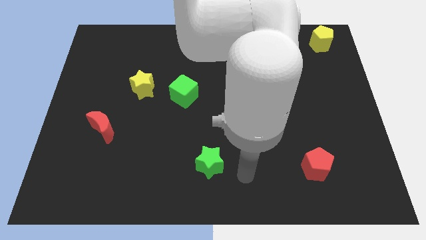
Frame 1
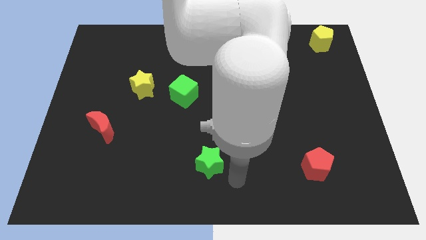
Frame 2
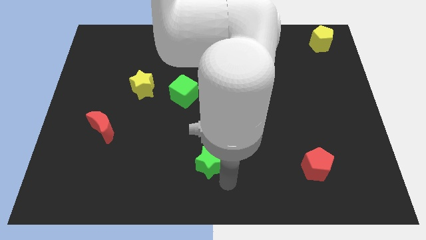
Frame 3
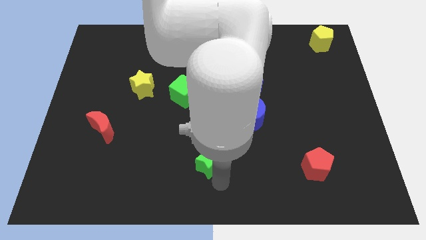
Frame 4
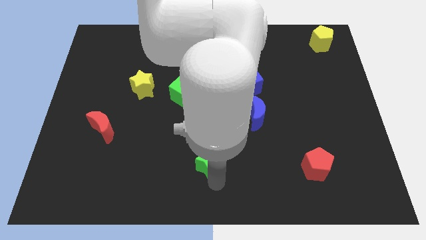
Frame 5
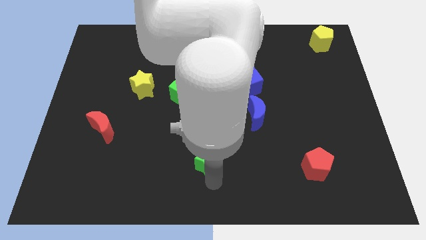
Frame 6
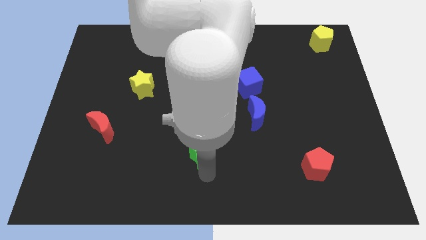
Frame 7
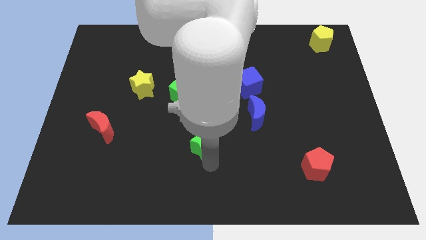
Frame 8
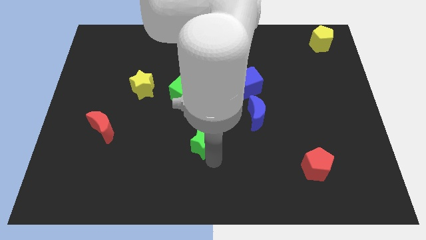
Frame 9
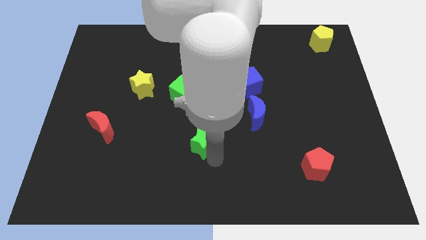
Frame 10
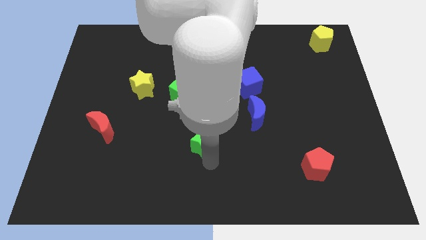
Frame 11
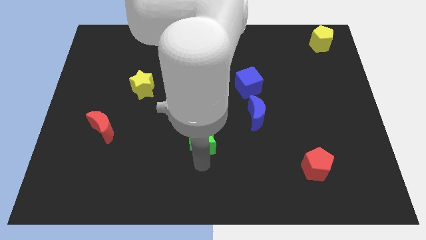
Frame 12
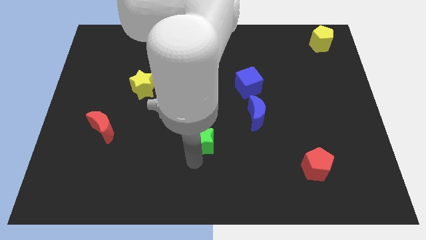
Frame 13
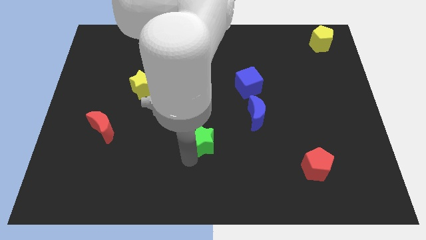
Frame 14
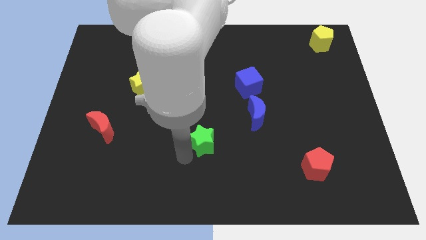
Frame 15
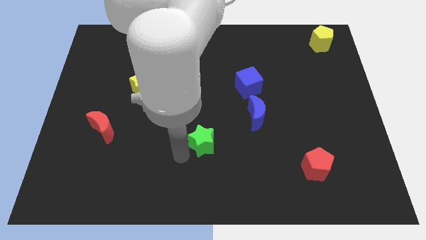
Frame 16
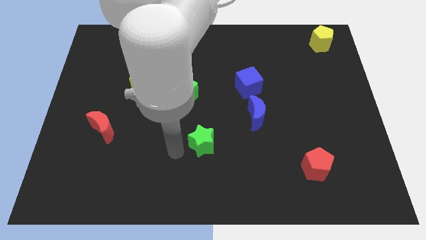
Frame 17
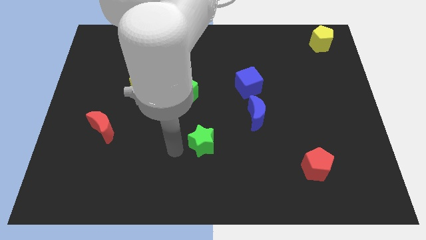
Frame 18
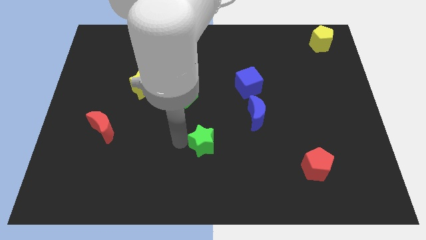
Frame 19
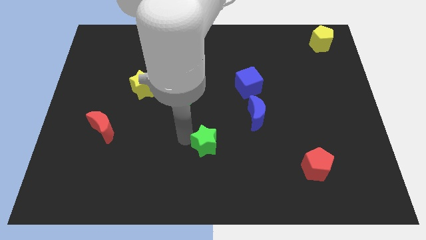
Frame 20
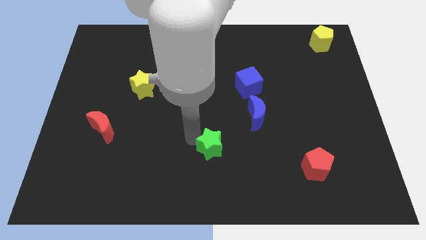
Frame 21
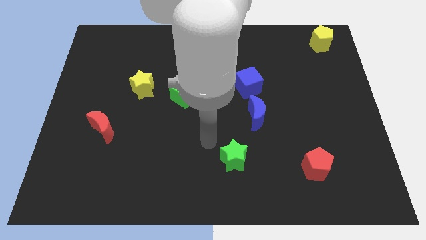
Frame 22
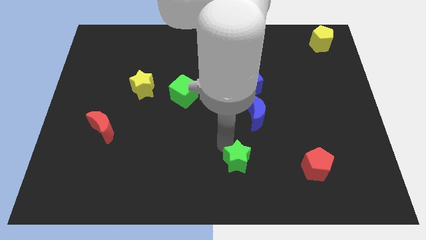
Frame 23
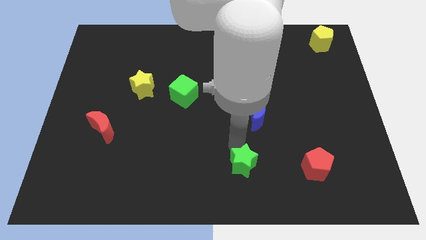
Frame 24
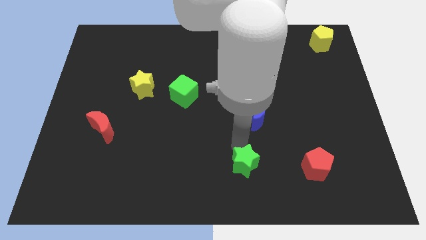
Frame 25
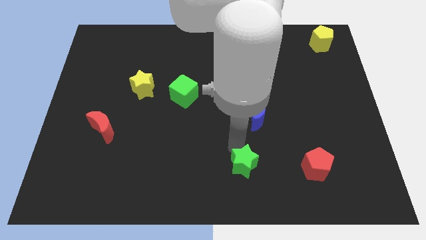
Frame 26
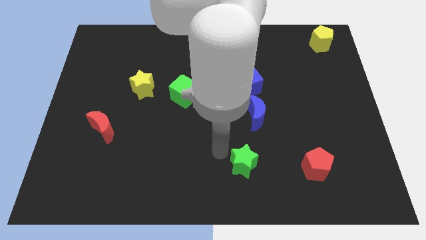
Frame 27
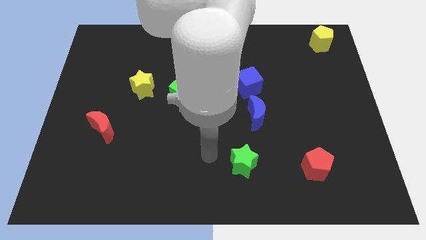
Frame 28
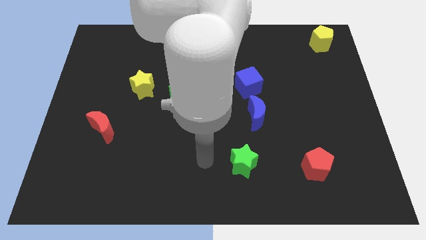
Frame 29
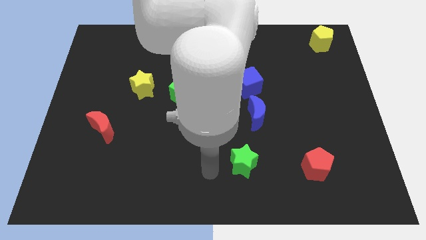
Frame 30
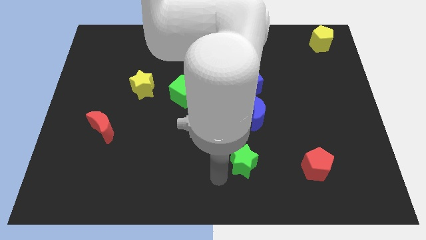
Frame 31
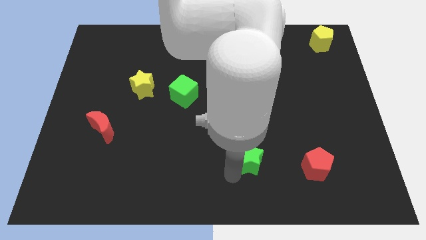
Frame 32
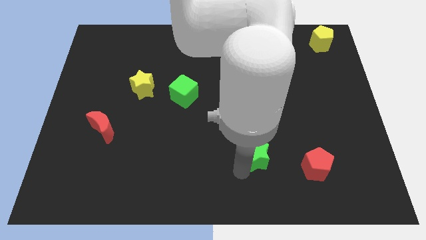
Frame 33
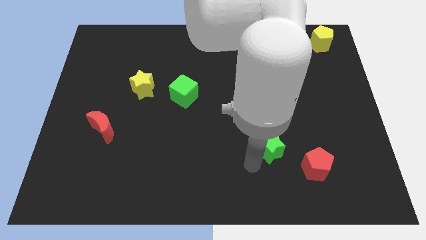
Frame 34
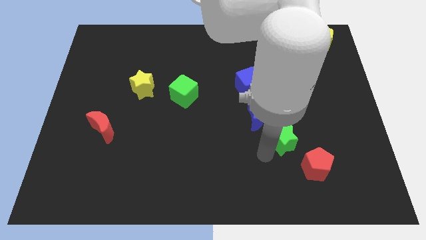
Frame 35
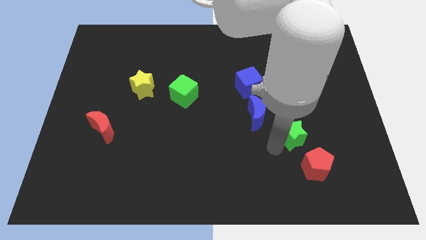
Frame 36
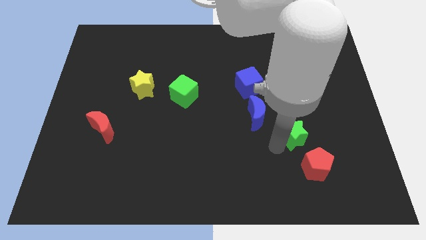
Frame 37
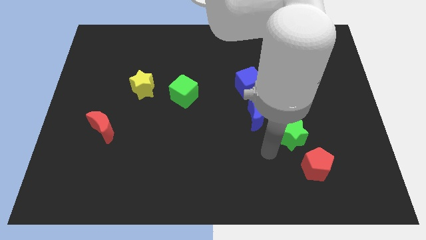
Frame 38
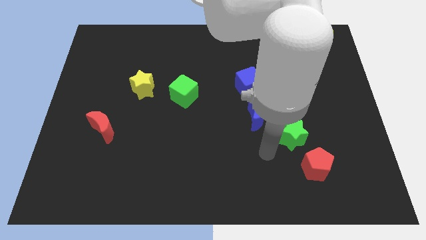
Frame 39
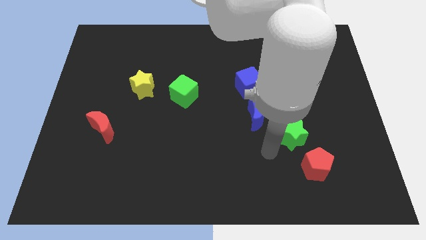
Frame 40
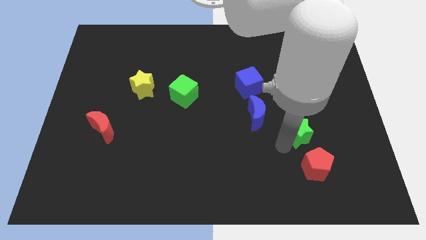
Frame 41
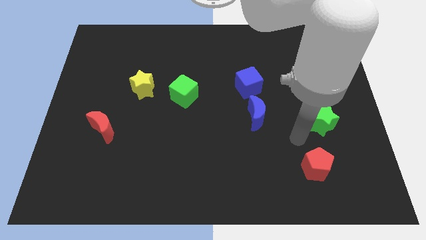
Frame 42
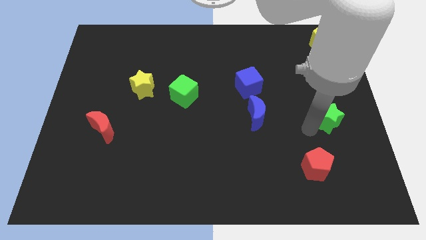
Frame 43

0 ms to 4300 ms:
move the green star to the right of blue moon

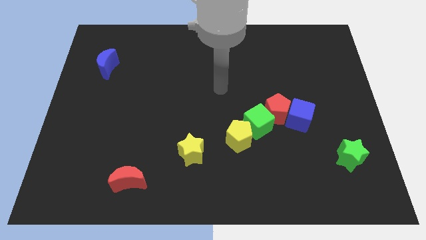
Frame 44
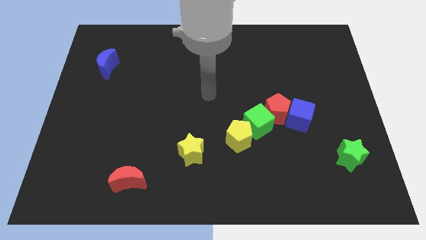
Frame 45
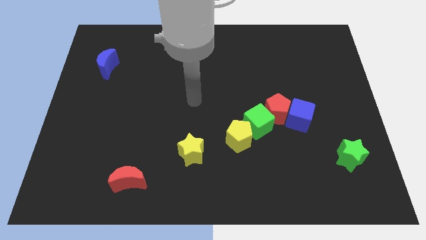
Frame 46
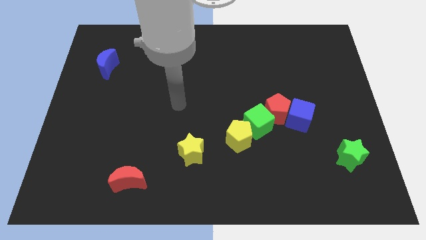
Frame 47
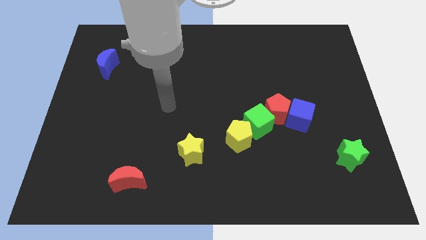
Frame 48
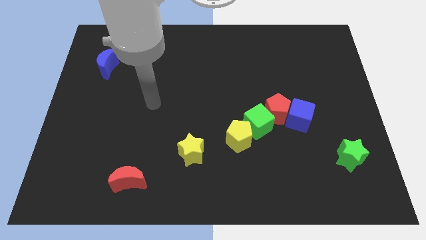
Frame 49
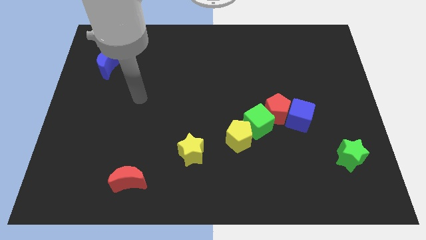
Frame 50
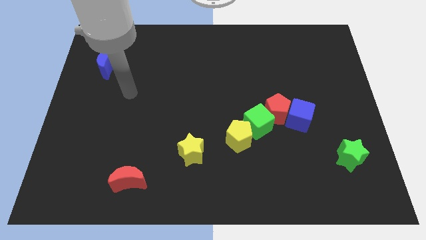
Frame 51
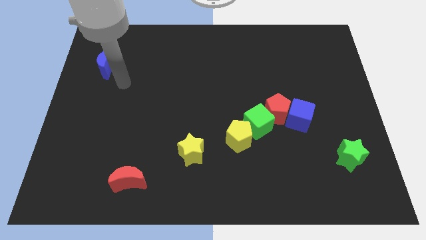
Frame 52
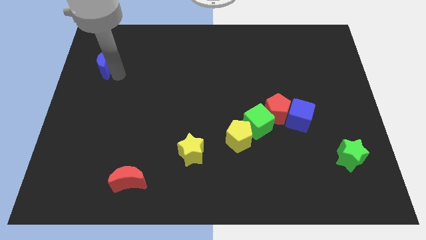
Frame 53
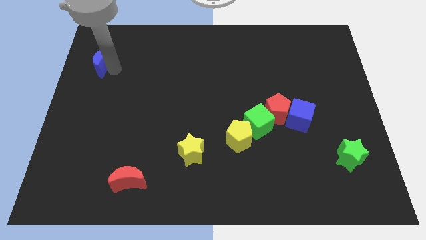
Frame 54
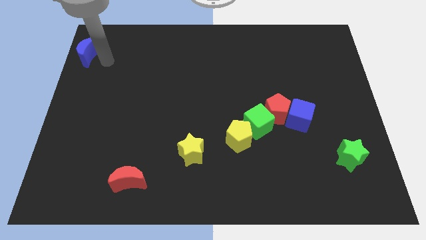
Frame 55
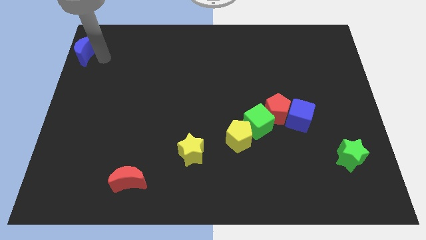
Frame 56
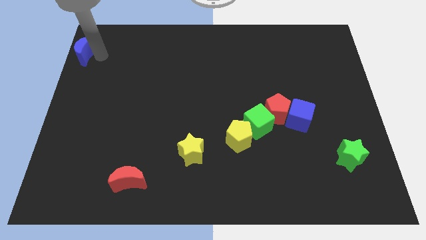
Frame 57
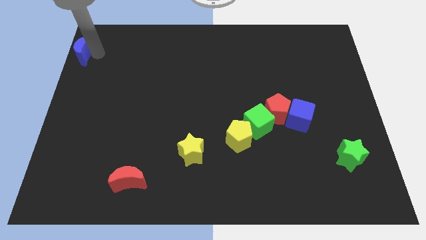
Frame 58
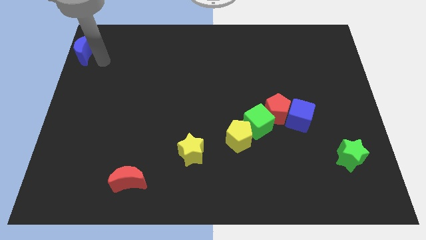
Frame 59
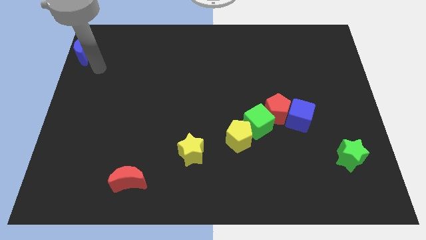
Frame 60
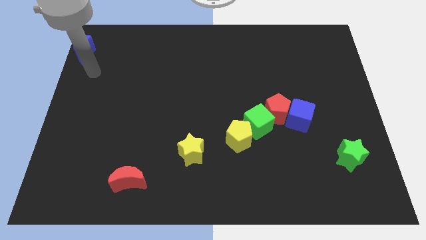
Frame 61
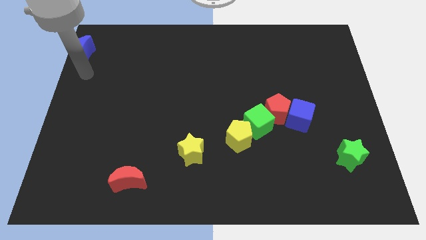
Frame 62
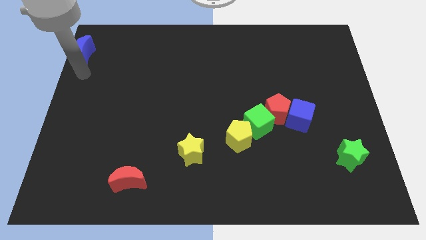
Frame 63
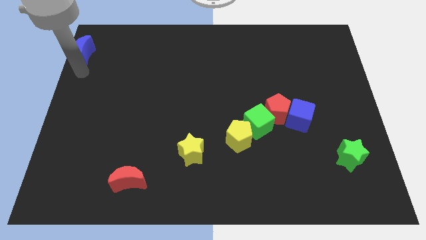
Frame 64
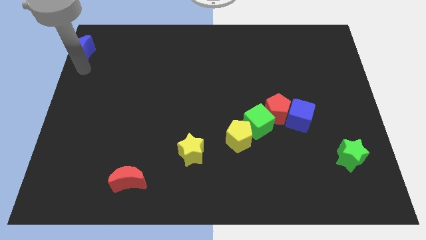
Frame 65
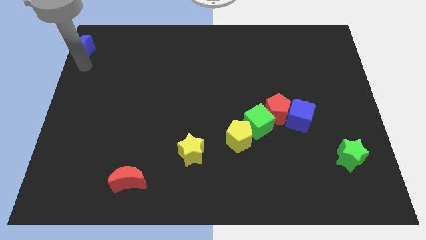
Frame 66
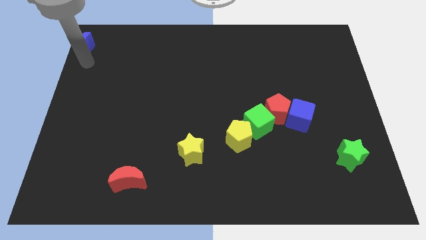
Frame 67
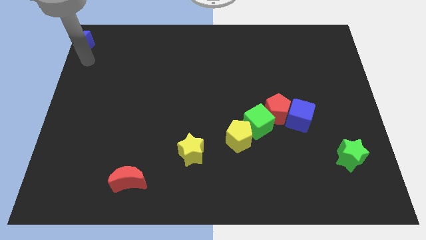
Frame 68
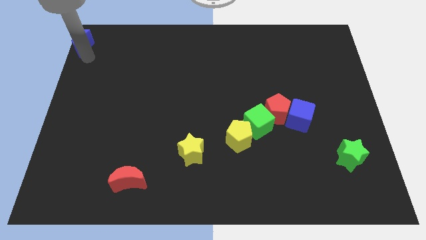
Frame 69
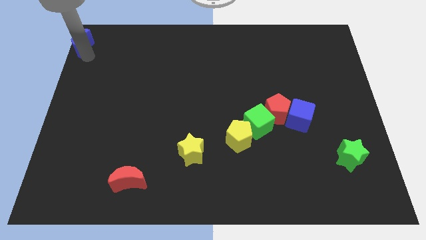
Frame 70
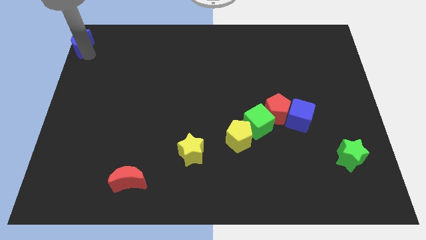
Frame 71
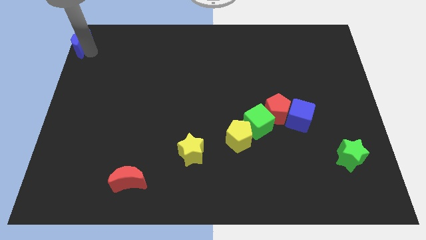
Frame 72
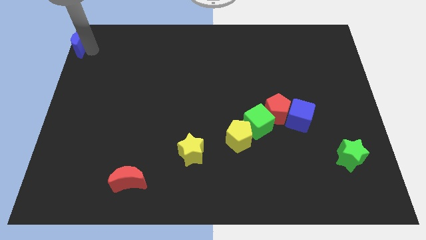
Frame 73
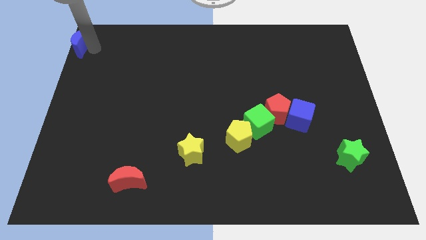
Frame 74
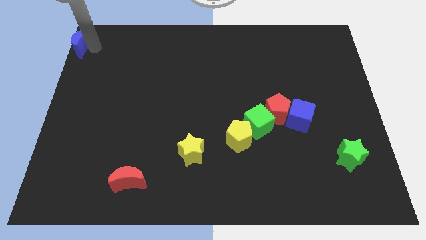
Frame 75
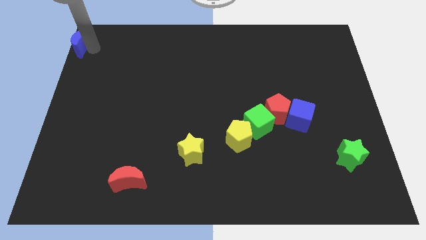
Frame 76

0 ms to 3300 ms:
move blue moon to the top left corner of the board

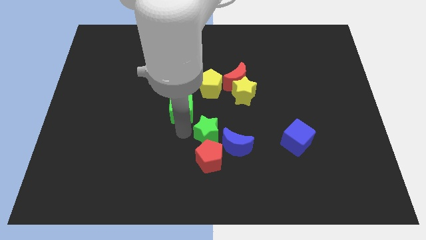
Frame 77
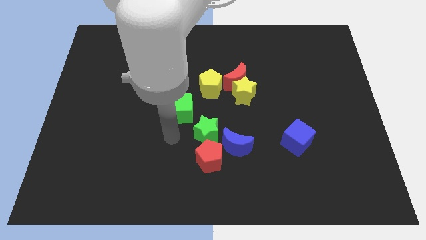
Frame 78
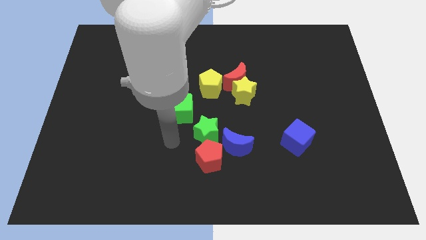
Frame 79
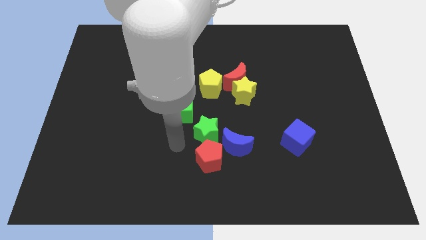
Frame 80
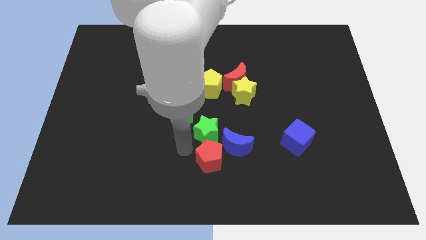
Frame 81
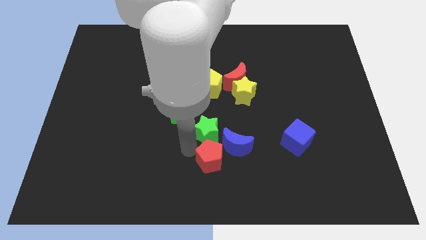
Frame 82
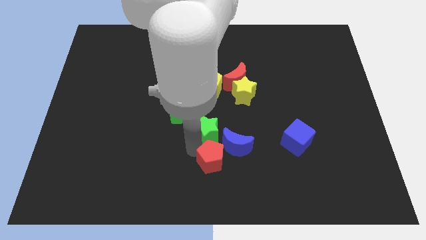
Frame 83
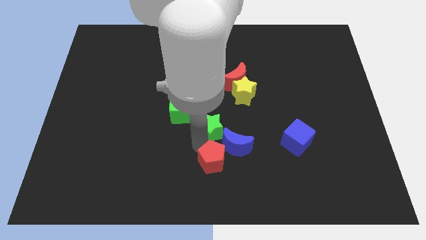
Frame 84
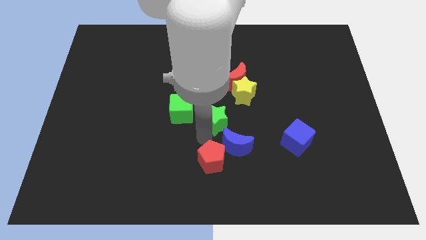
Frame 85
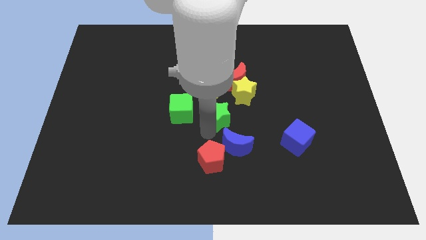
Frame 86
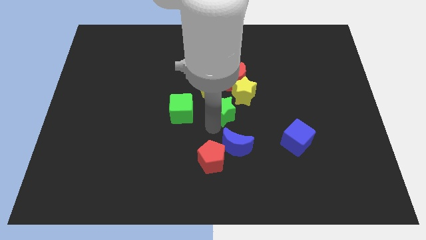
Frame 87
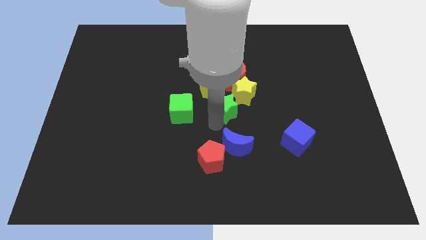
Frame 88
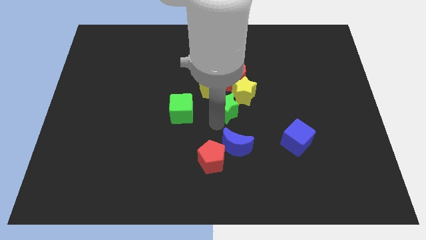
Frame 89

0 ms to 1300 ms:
move the green star towards the upside in between the yellow pentagon and yellow star

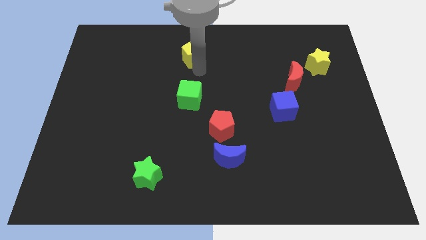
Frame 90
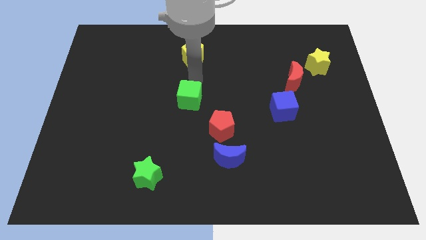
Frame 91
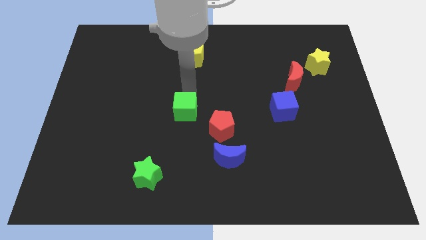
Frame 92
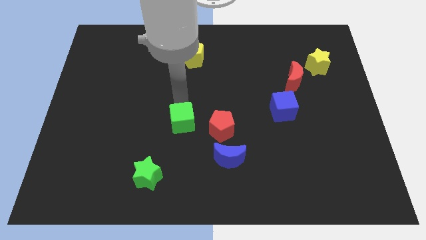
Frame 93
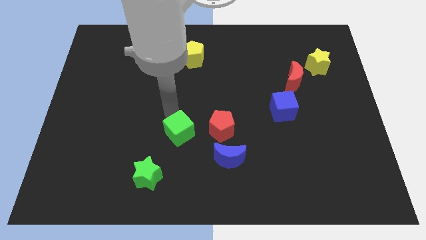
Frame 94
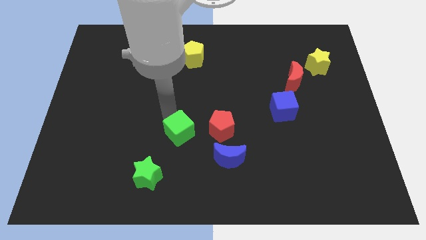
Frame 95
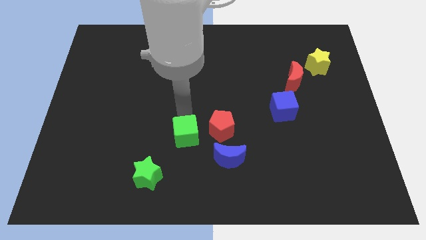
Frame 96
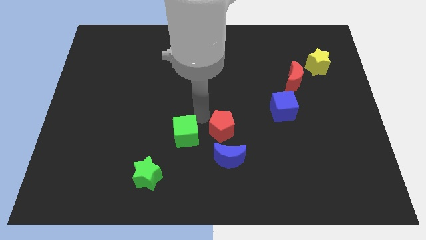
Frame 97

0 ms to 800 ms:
move the green cube to the left of the red pentagon
